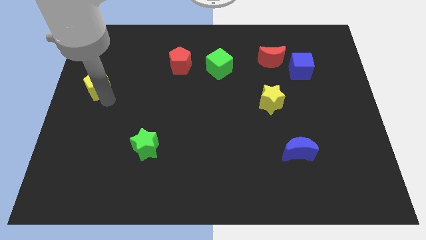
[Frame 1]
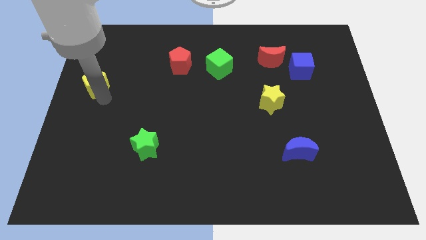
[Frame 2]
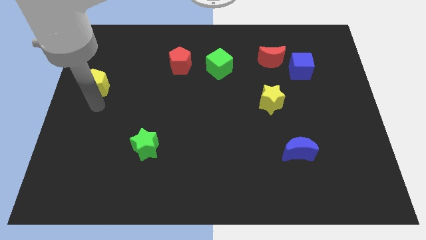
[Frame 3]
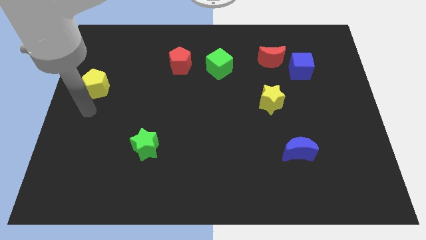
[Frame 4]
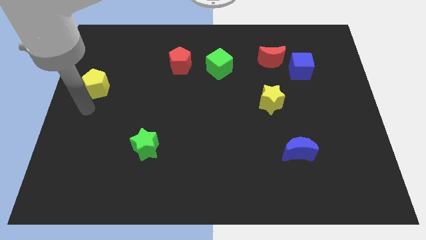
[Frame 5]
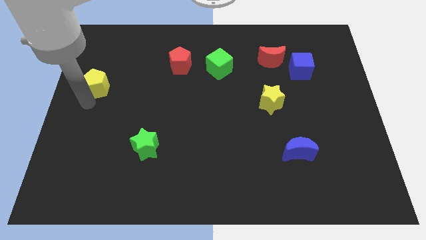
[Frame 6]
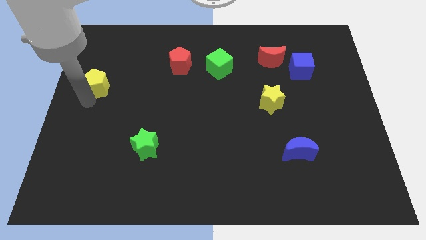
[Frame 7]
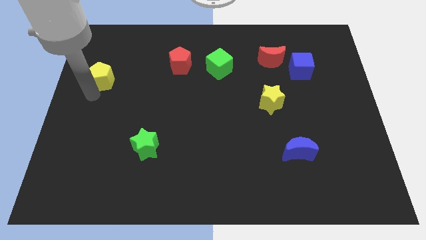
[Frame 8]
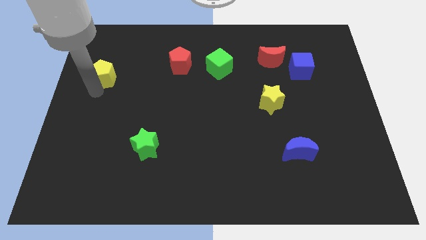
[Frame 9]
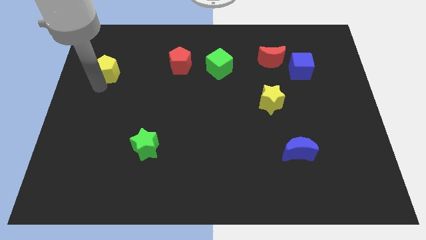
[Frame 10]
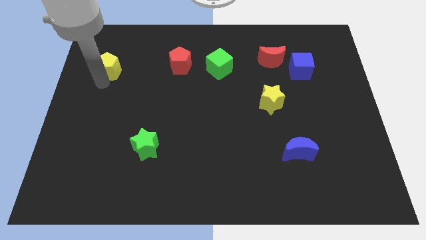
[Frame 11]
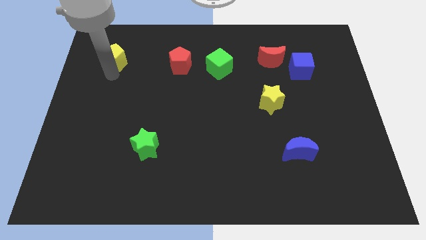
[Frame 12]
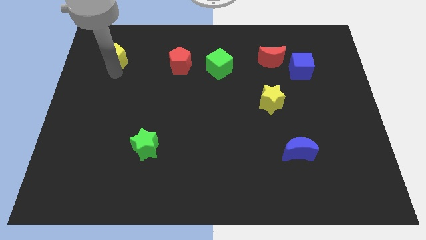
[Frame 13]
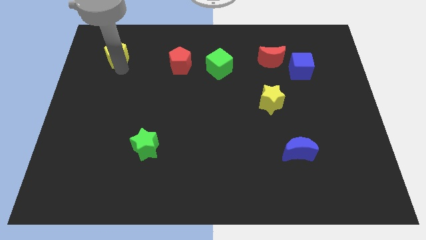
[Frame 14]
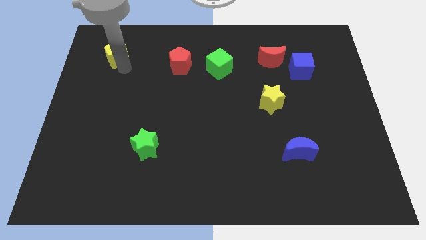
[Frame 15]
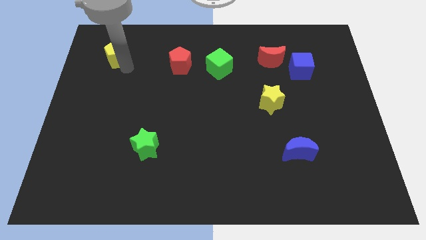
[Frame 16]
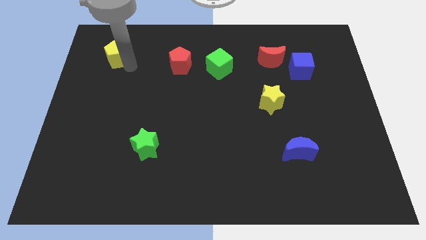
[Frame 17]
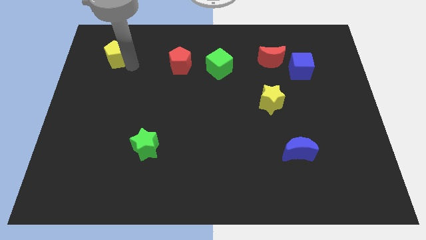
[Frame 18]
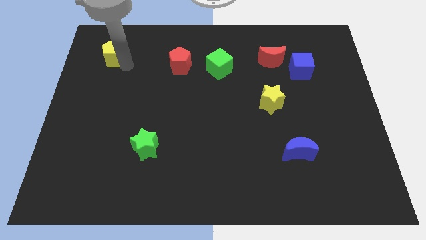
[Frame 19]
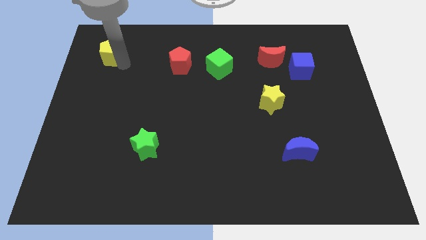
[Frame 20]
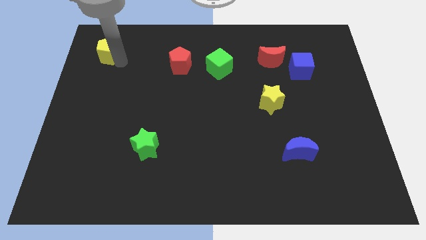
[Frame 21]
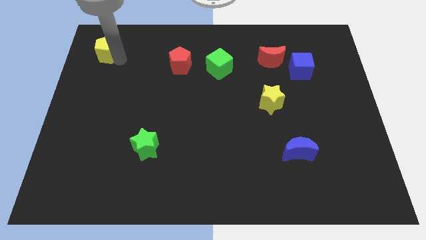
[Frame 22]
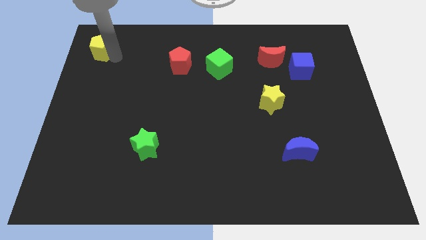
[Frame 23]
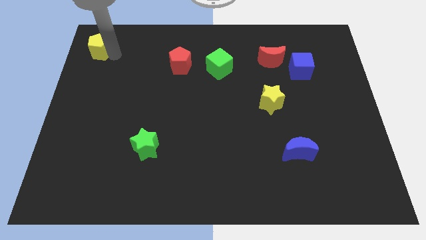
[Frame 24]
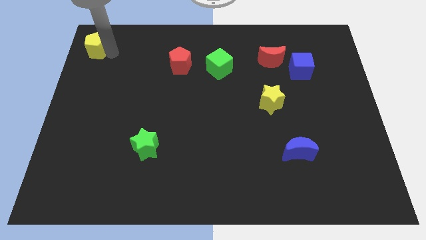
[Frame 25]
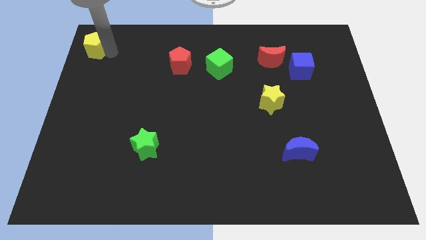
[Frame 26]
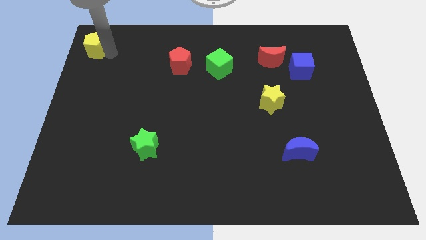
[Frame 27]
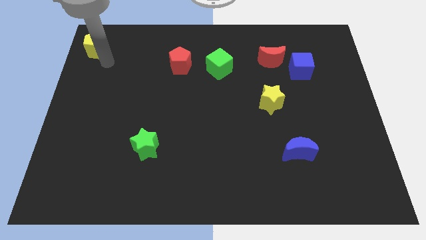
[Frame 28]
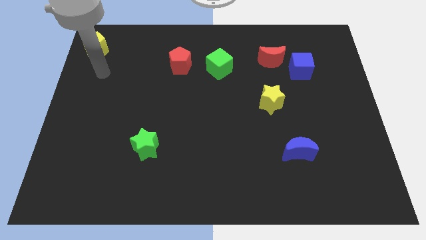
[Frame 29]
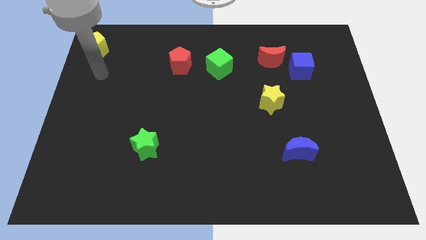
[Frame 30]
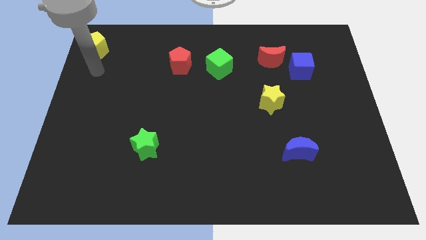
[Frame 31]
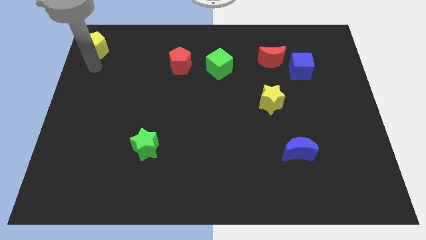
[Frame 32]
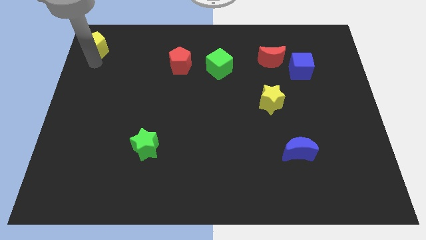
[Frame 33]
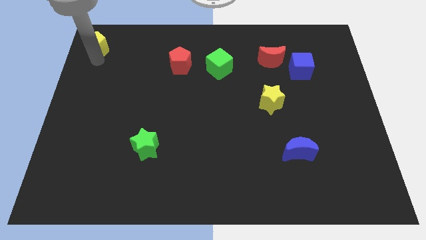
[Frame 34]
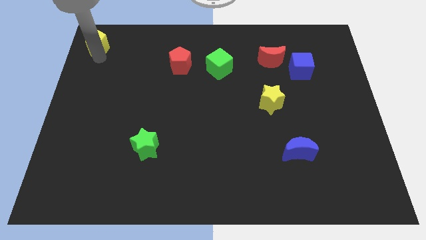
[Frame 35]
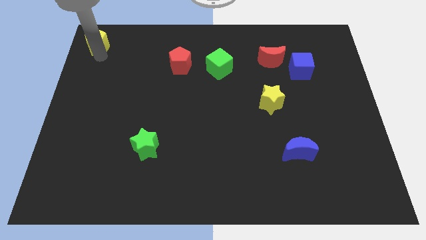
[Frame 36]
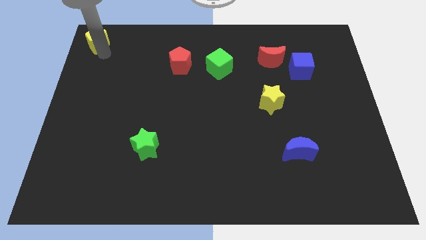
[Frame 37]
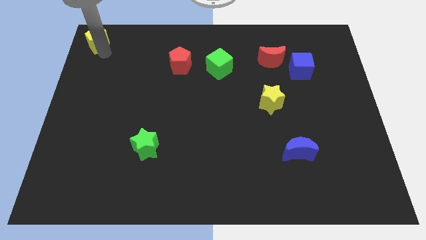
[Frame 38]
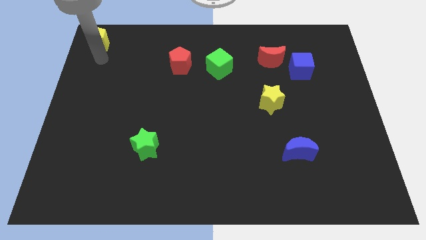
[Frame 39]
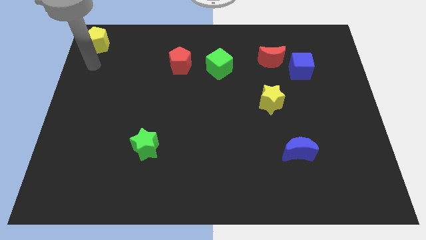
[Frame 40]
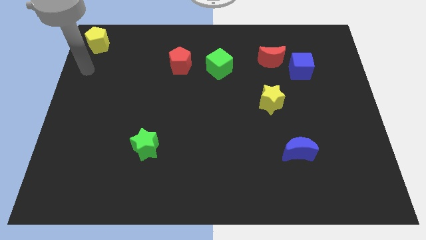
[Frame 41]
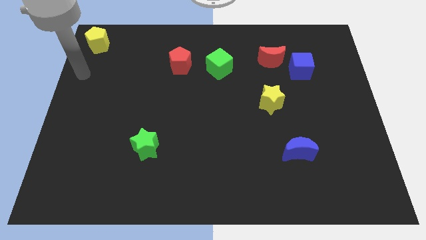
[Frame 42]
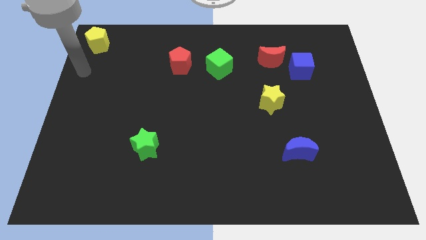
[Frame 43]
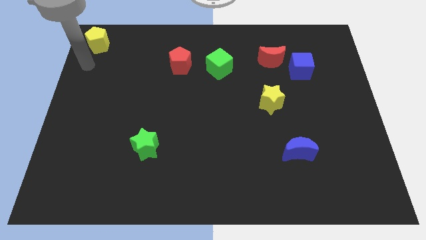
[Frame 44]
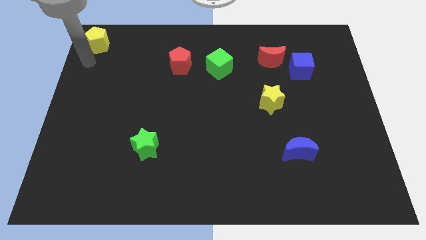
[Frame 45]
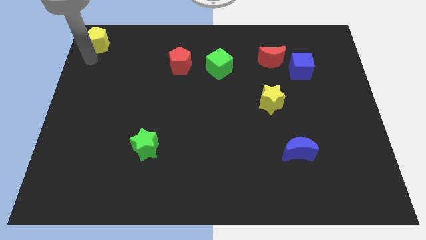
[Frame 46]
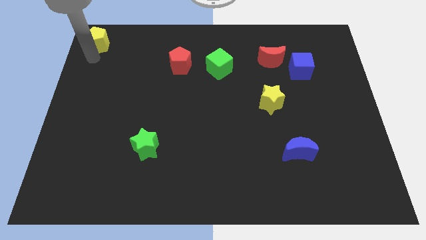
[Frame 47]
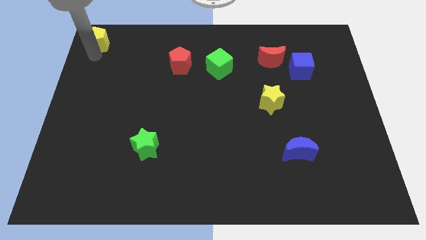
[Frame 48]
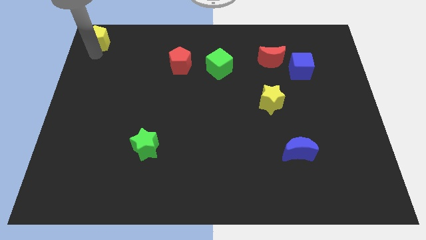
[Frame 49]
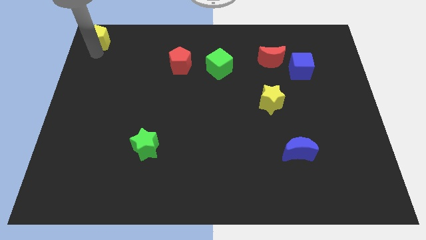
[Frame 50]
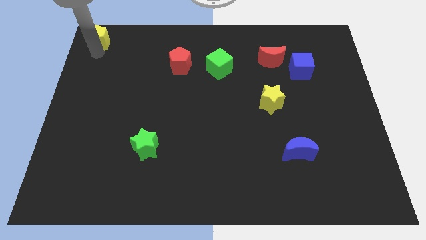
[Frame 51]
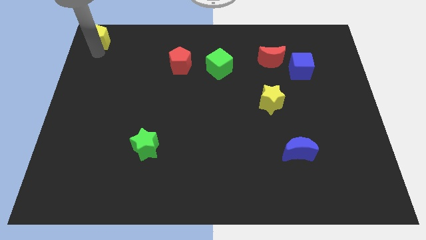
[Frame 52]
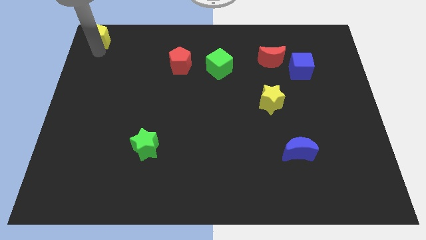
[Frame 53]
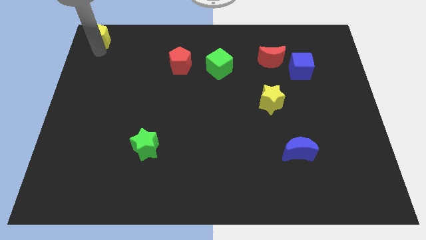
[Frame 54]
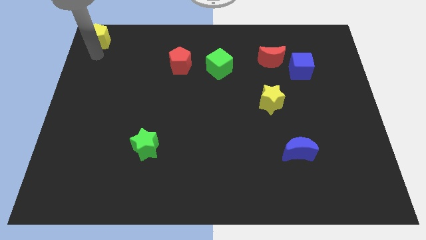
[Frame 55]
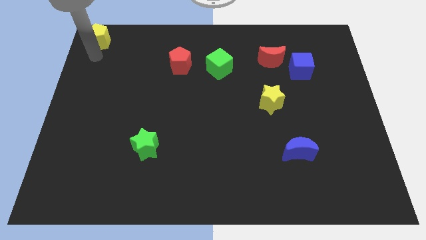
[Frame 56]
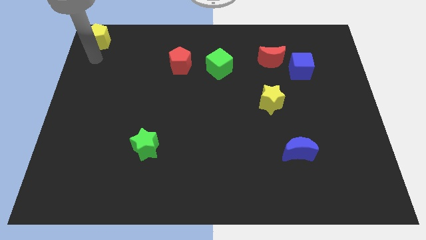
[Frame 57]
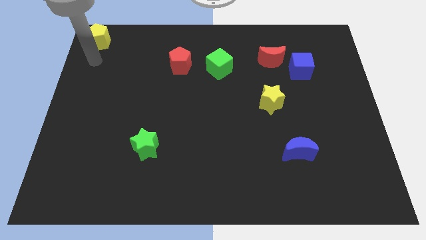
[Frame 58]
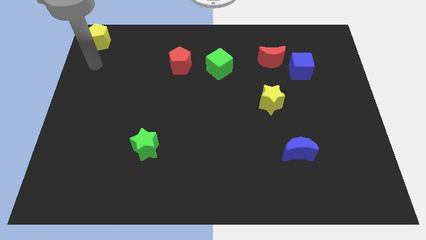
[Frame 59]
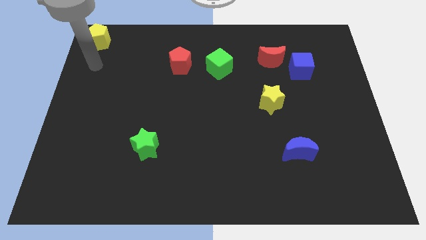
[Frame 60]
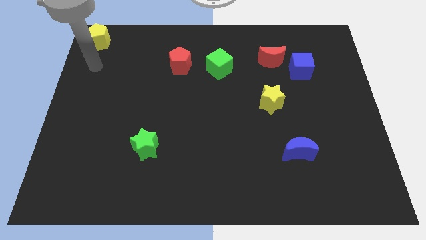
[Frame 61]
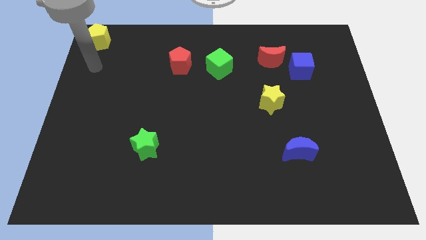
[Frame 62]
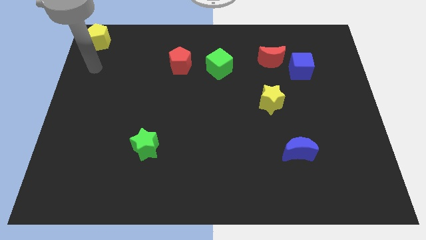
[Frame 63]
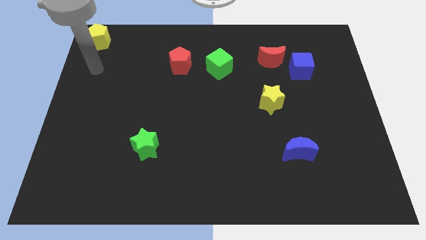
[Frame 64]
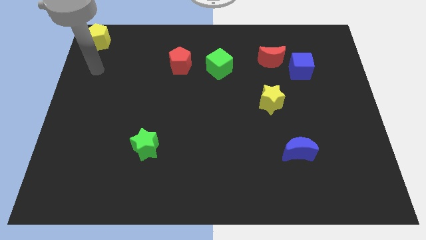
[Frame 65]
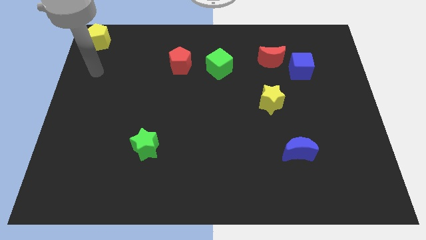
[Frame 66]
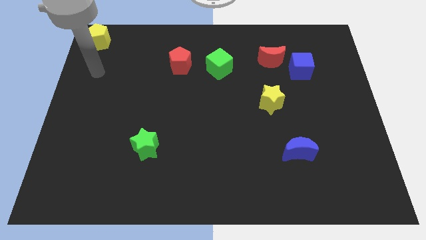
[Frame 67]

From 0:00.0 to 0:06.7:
move the yellow pentagon to the top left corner of the board

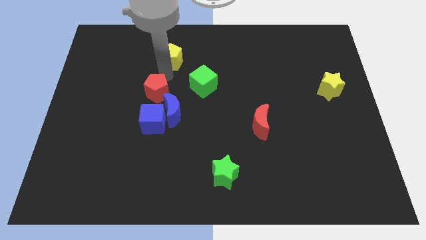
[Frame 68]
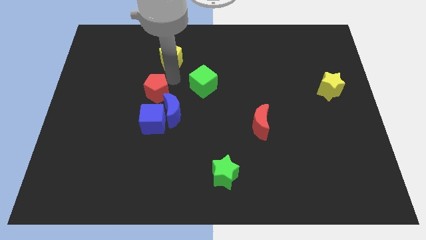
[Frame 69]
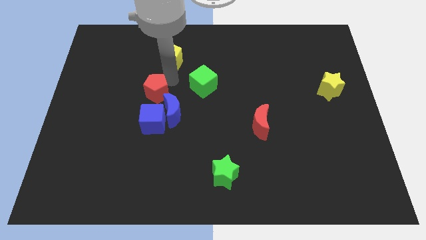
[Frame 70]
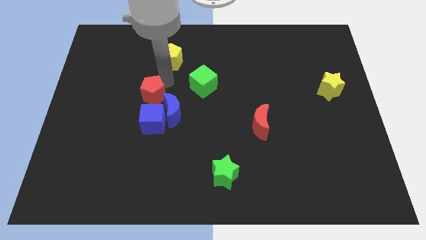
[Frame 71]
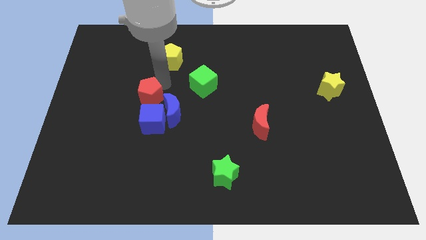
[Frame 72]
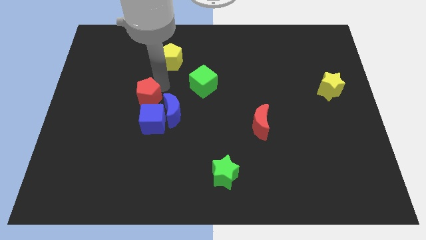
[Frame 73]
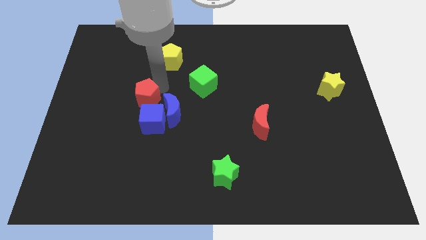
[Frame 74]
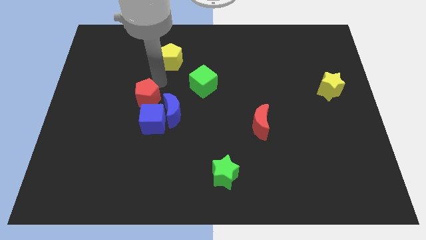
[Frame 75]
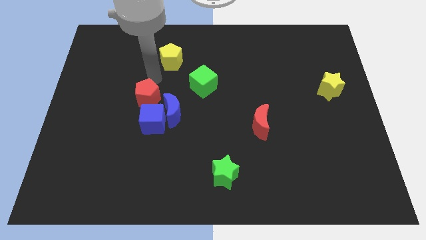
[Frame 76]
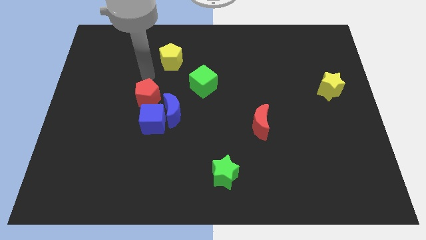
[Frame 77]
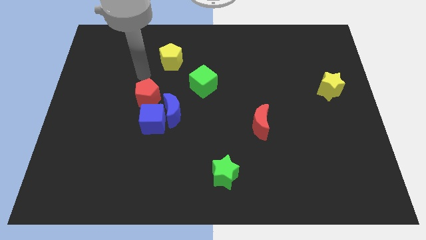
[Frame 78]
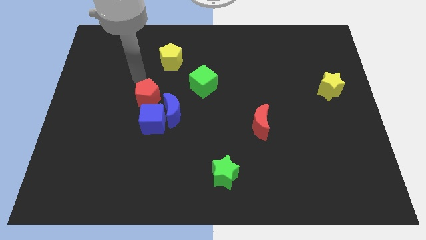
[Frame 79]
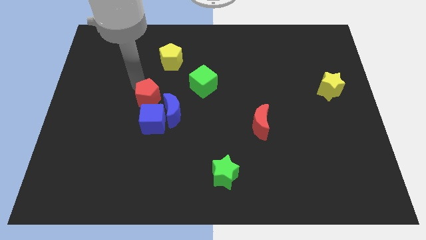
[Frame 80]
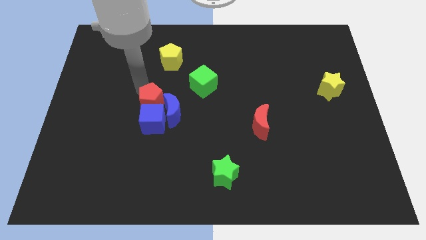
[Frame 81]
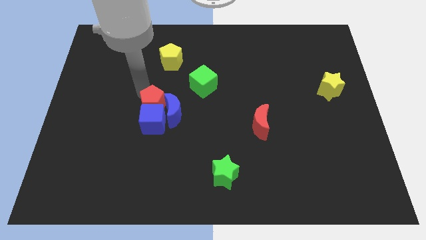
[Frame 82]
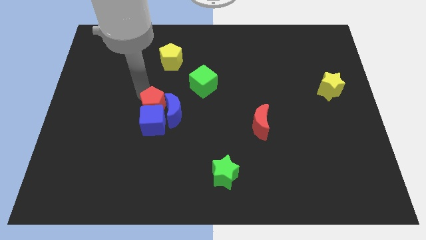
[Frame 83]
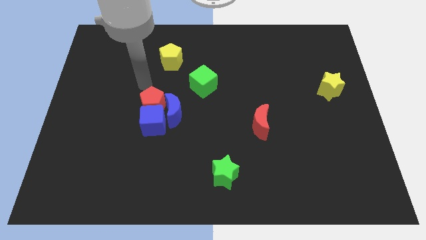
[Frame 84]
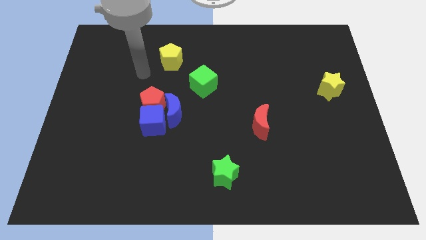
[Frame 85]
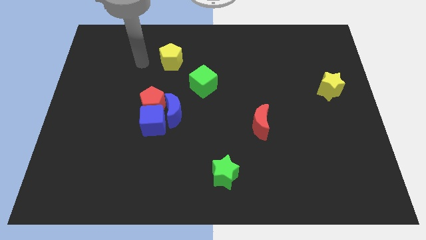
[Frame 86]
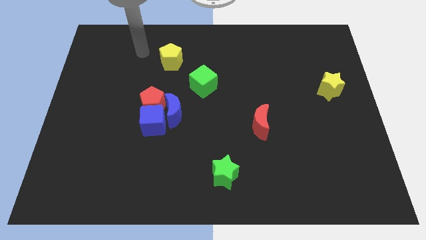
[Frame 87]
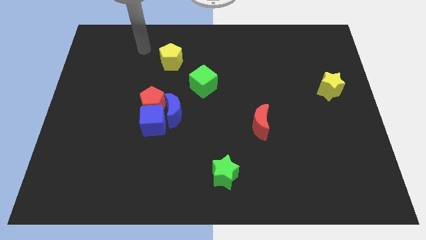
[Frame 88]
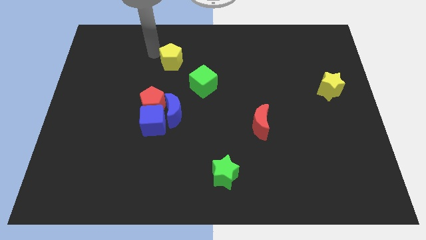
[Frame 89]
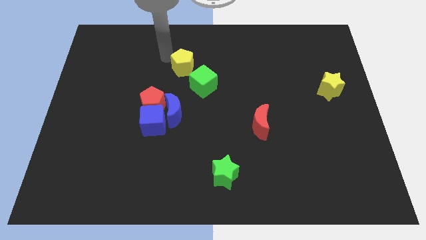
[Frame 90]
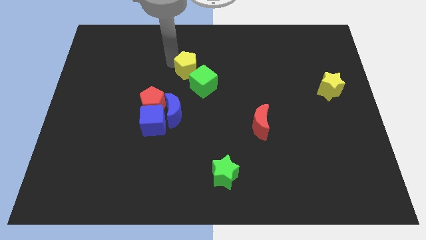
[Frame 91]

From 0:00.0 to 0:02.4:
push the red pentagon into the blue cube
